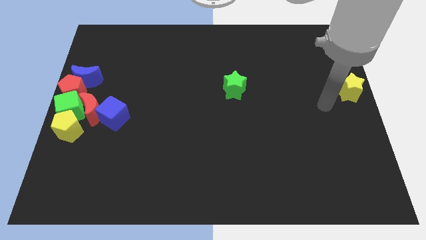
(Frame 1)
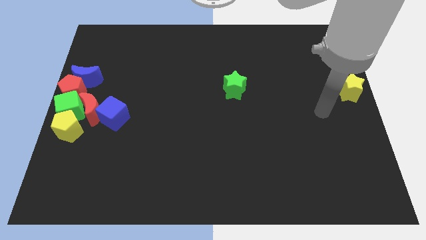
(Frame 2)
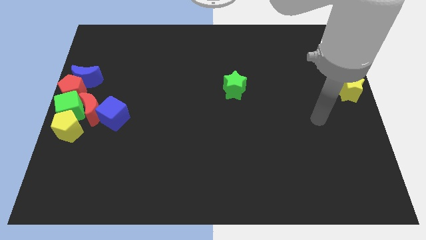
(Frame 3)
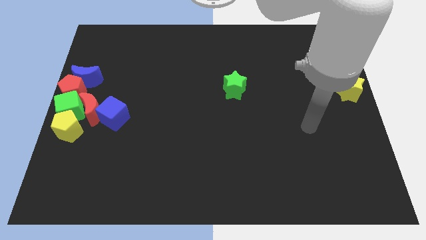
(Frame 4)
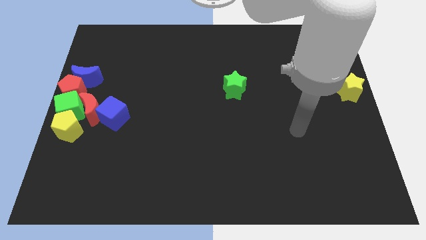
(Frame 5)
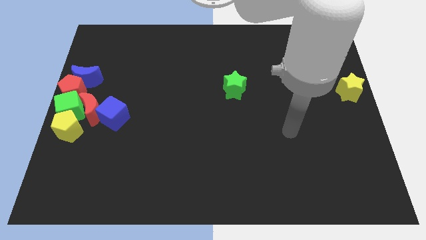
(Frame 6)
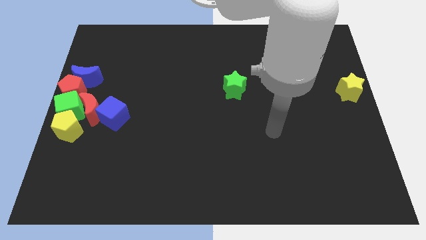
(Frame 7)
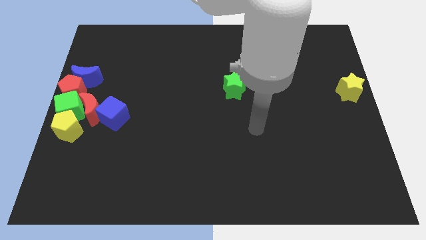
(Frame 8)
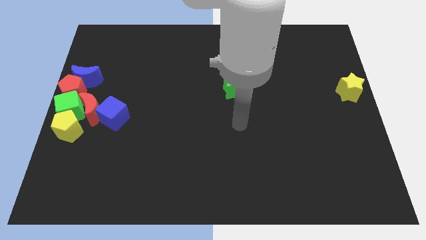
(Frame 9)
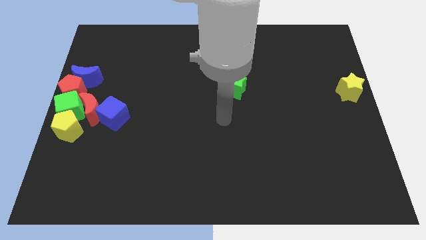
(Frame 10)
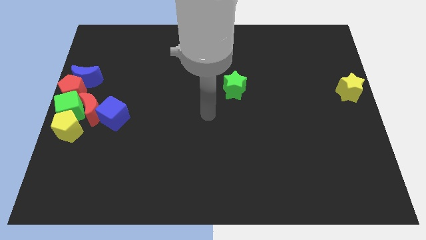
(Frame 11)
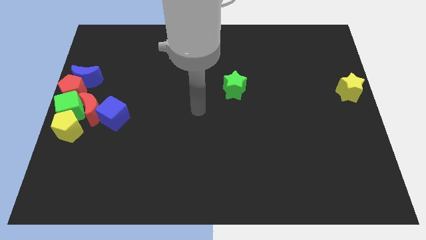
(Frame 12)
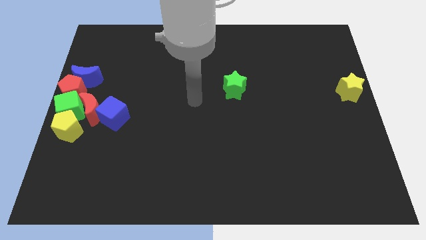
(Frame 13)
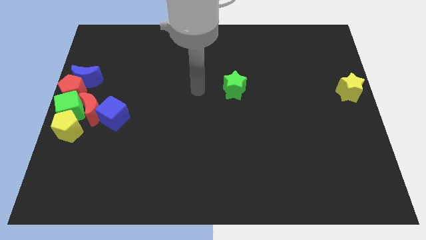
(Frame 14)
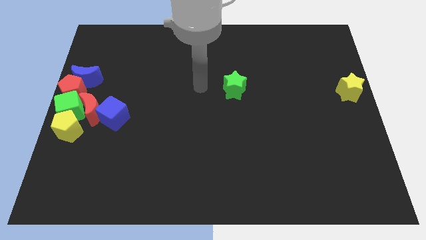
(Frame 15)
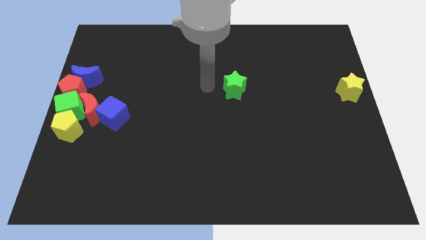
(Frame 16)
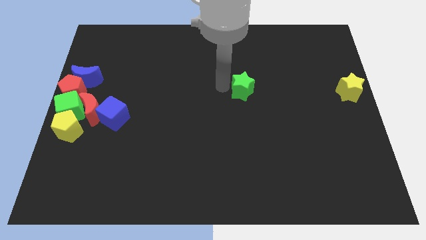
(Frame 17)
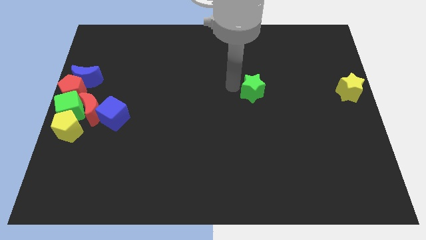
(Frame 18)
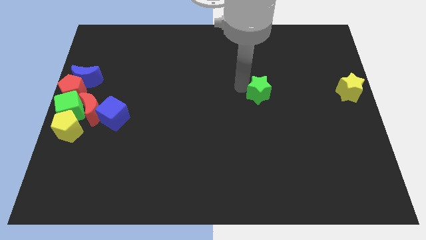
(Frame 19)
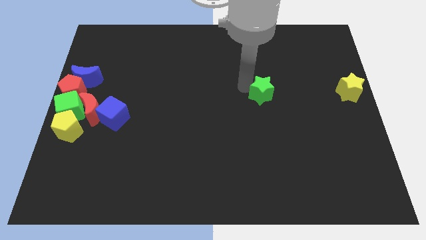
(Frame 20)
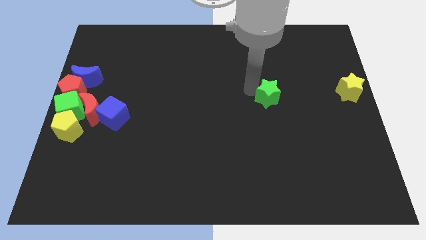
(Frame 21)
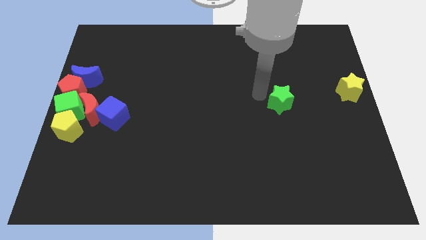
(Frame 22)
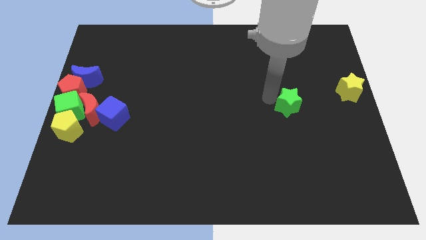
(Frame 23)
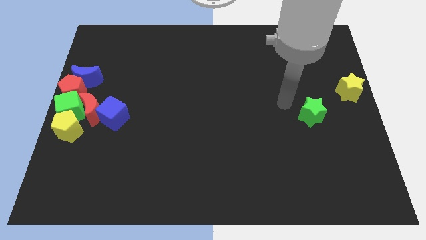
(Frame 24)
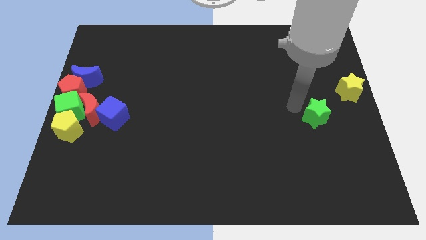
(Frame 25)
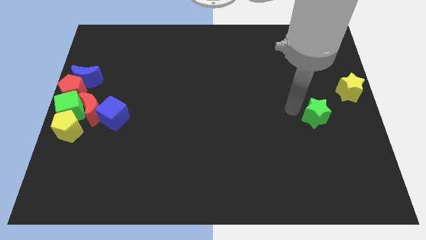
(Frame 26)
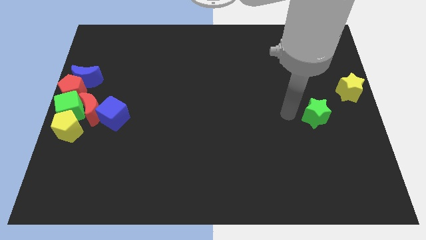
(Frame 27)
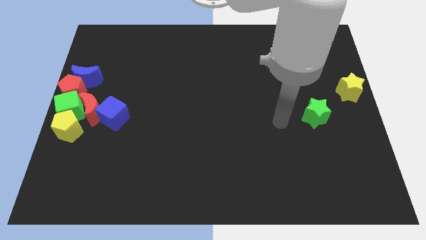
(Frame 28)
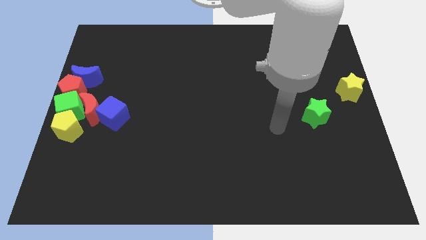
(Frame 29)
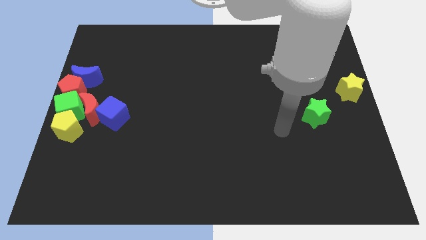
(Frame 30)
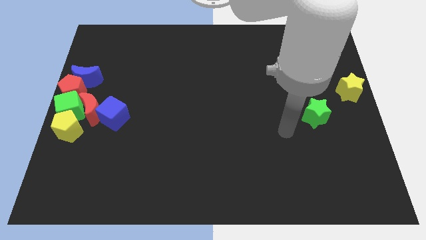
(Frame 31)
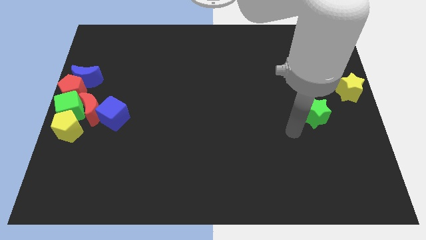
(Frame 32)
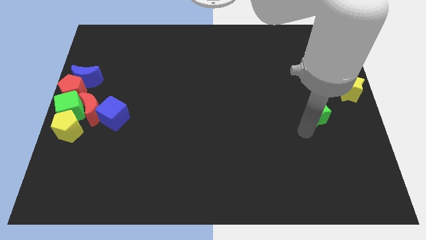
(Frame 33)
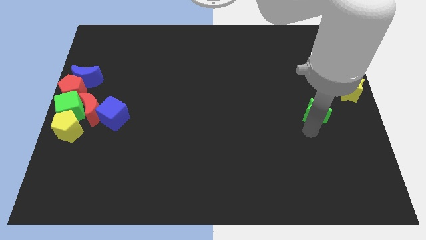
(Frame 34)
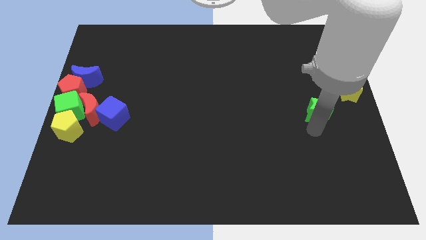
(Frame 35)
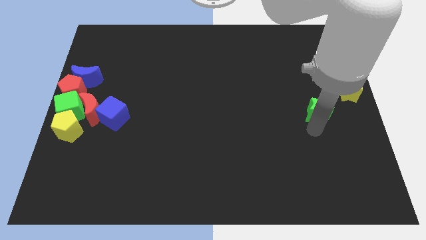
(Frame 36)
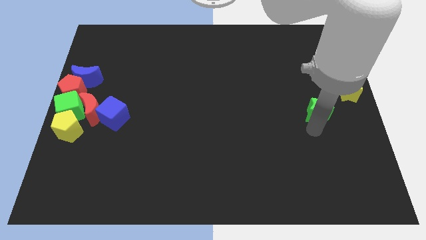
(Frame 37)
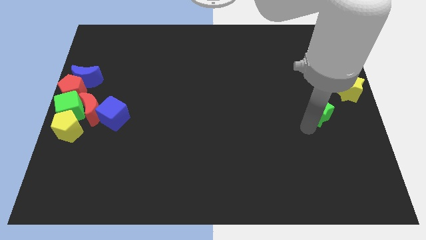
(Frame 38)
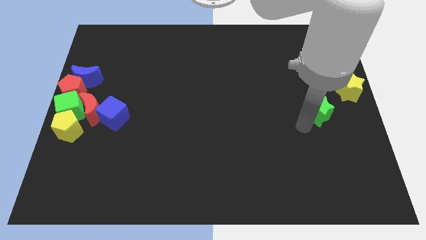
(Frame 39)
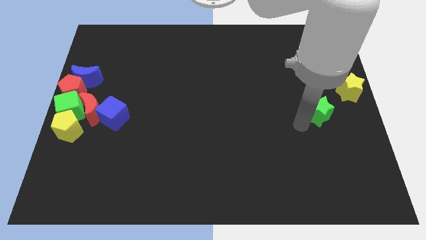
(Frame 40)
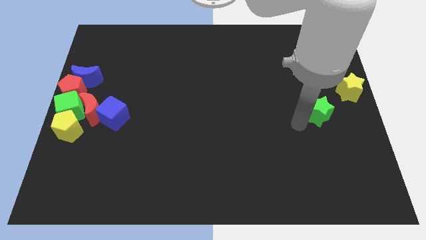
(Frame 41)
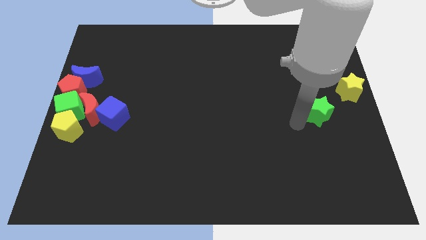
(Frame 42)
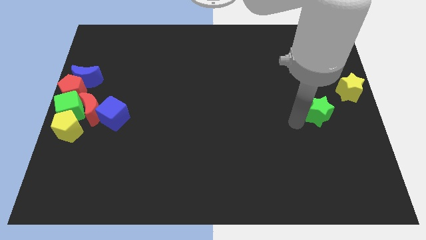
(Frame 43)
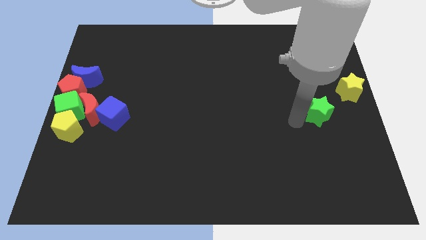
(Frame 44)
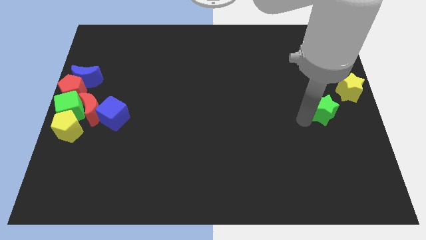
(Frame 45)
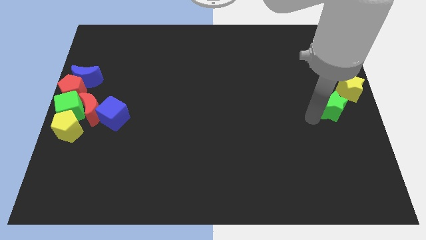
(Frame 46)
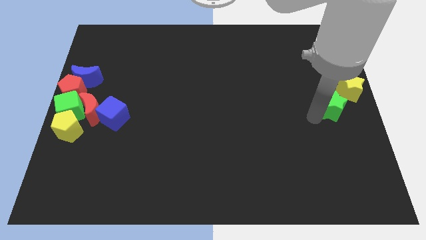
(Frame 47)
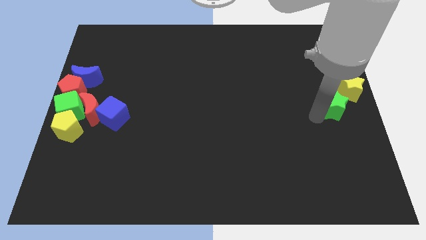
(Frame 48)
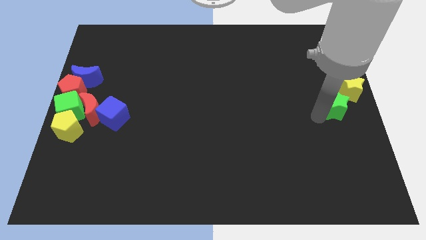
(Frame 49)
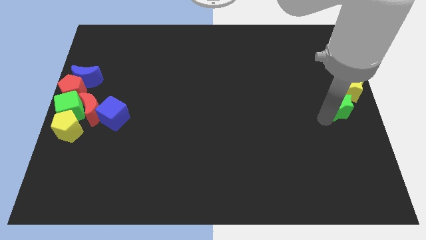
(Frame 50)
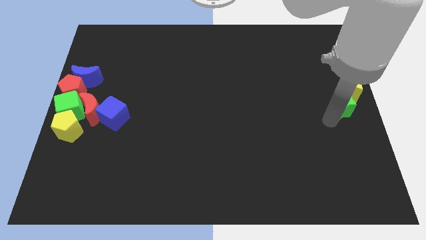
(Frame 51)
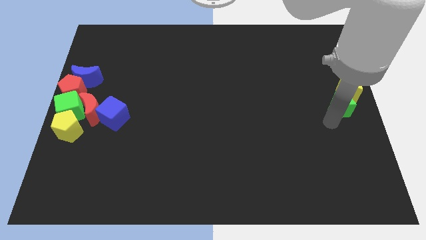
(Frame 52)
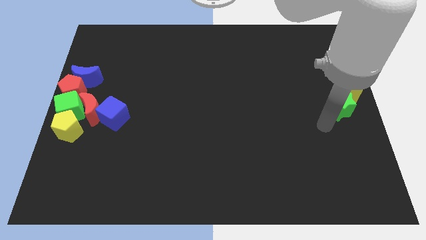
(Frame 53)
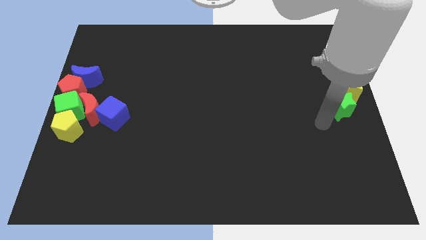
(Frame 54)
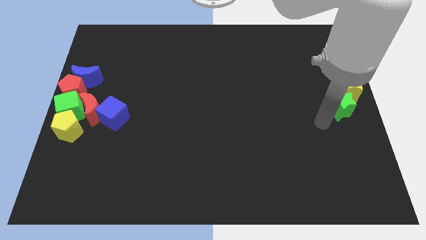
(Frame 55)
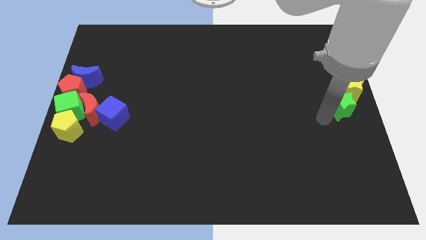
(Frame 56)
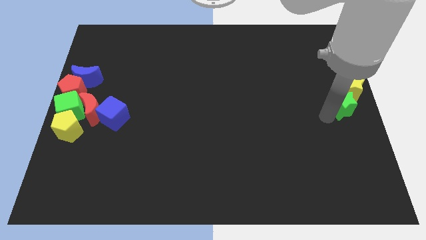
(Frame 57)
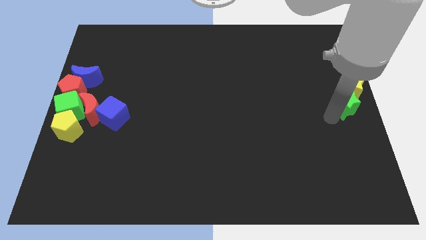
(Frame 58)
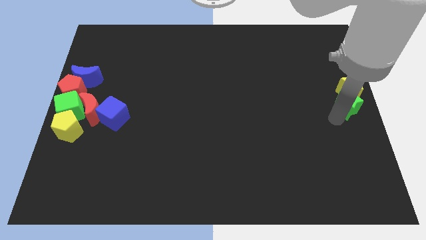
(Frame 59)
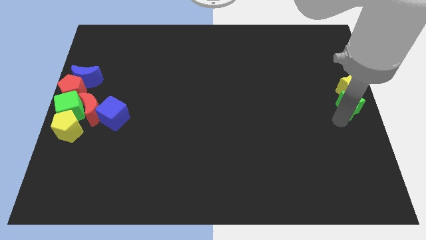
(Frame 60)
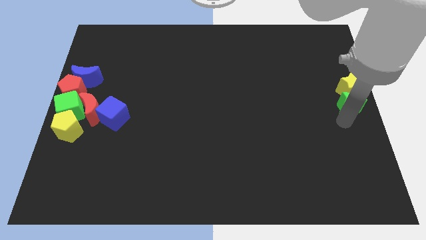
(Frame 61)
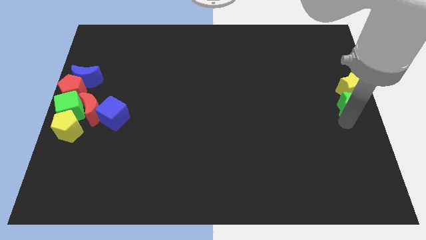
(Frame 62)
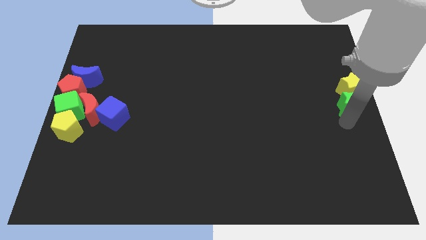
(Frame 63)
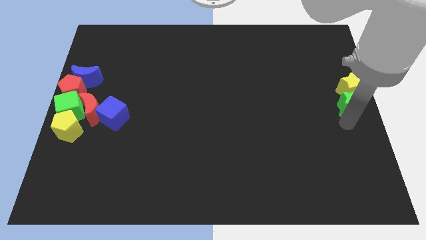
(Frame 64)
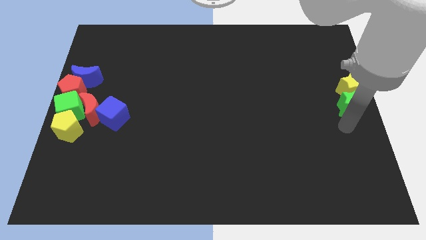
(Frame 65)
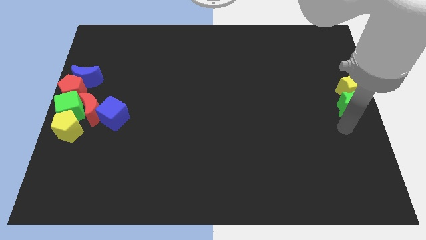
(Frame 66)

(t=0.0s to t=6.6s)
slide the green star to the bottom side of the yellow star

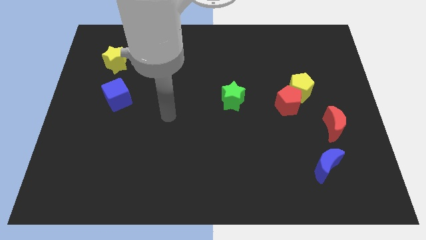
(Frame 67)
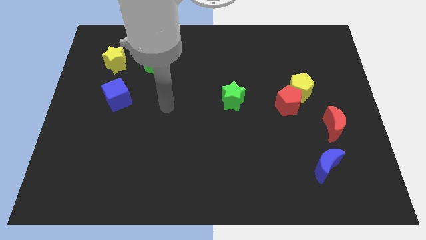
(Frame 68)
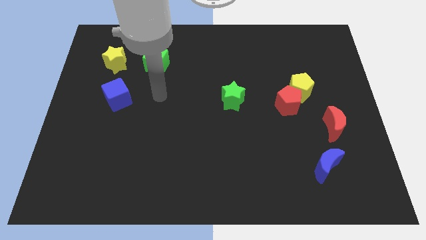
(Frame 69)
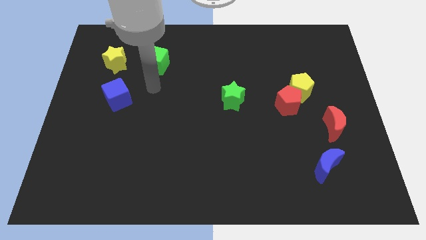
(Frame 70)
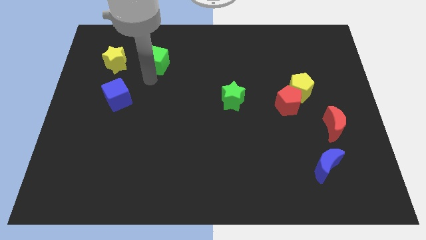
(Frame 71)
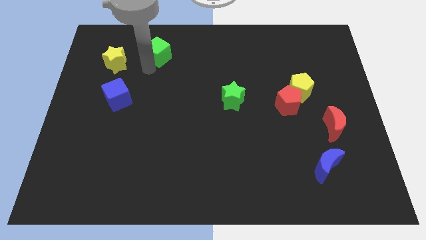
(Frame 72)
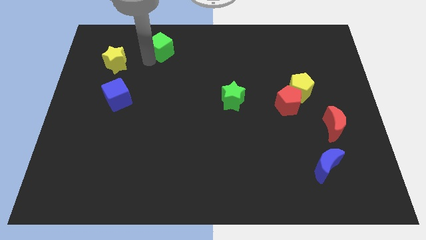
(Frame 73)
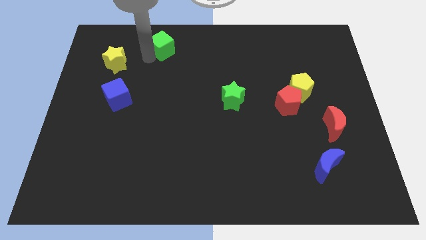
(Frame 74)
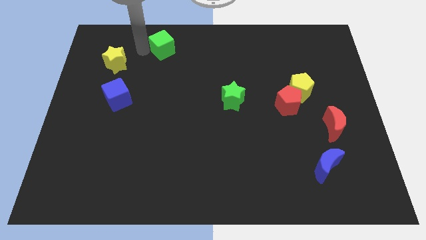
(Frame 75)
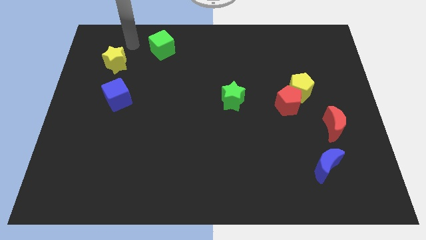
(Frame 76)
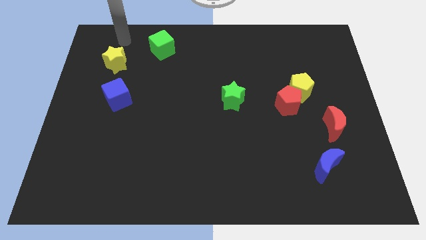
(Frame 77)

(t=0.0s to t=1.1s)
slightly move the green cube up

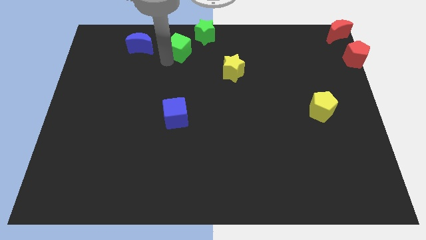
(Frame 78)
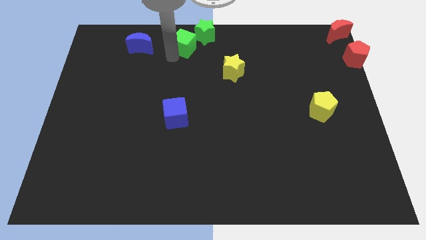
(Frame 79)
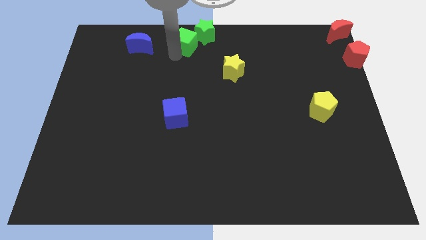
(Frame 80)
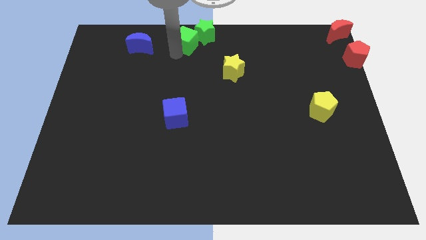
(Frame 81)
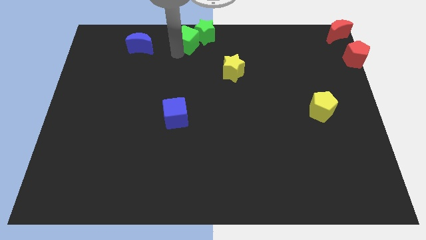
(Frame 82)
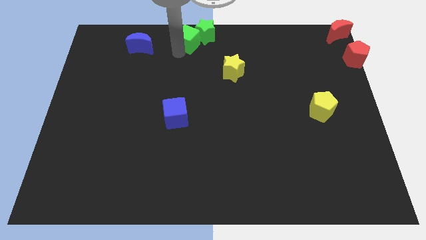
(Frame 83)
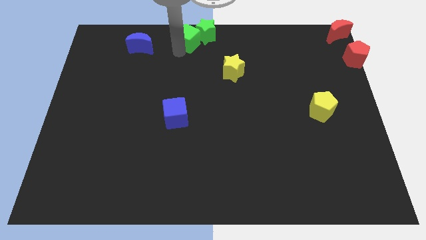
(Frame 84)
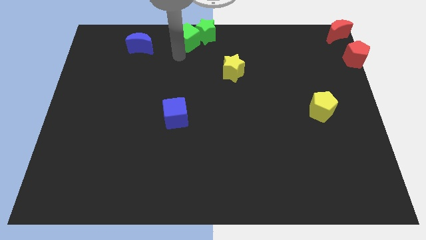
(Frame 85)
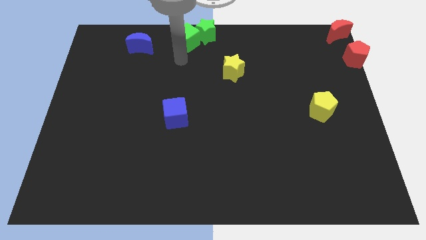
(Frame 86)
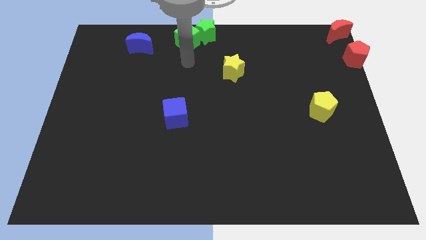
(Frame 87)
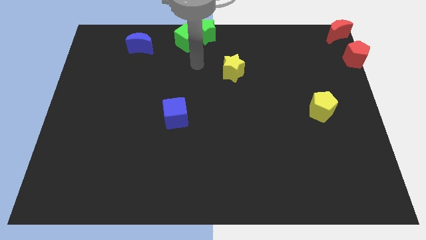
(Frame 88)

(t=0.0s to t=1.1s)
place the green cube close to the green star
